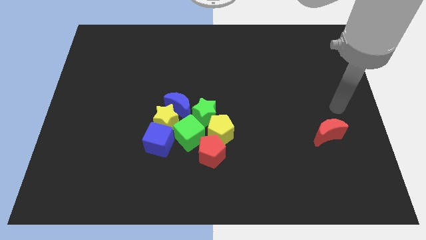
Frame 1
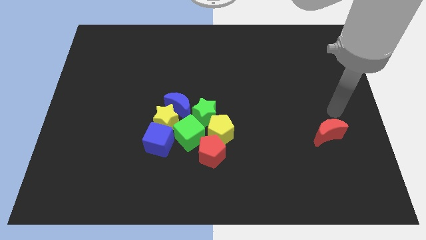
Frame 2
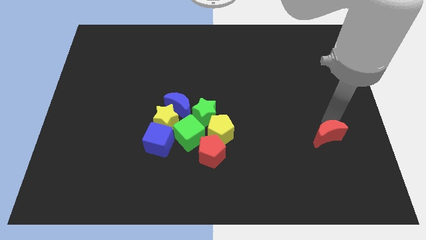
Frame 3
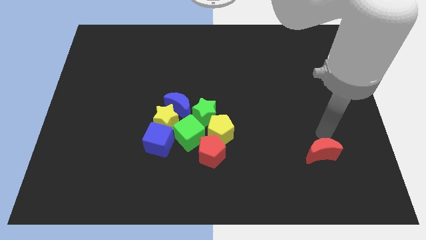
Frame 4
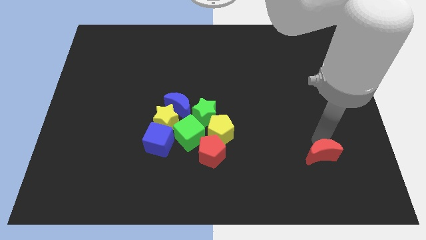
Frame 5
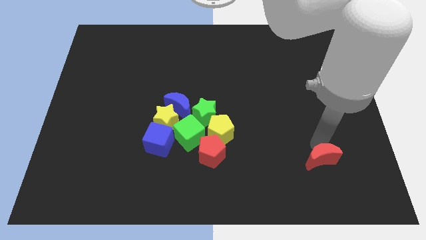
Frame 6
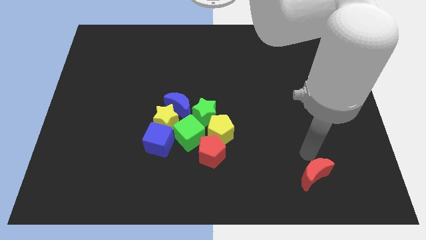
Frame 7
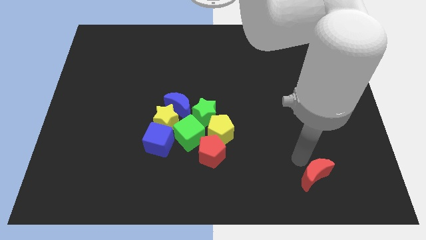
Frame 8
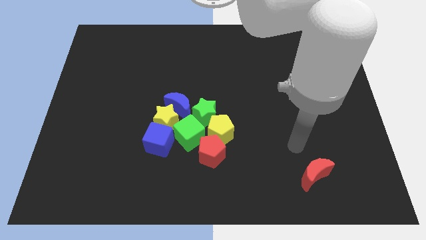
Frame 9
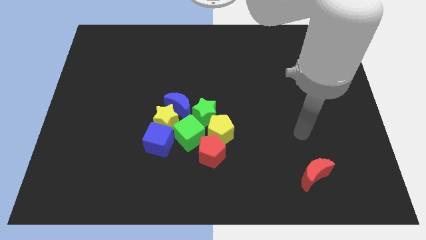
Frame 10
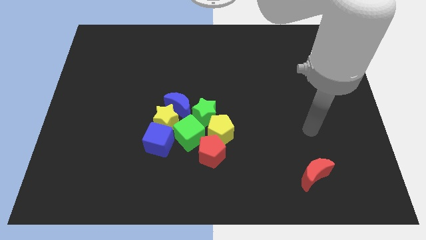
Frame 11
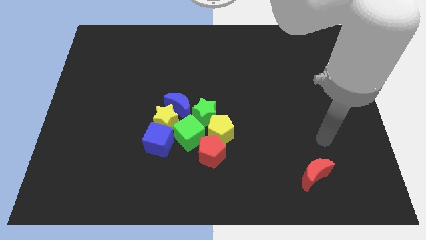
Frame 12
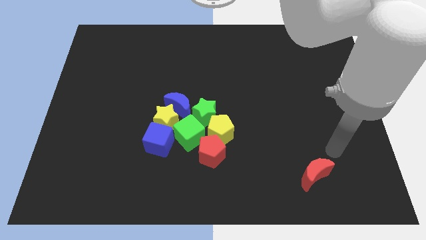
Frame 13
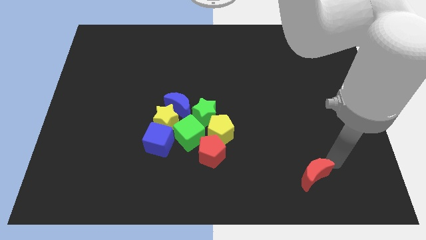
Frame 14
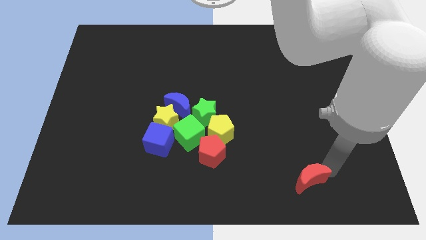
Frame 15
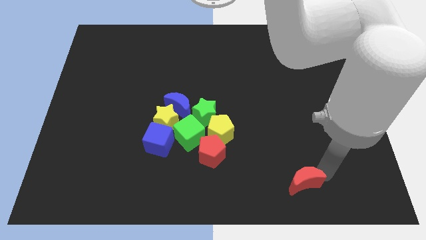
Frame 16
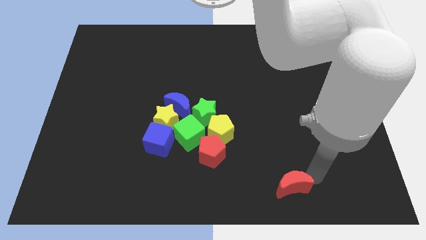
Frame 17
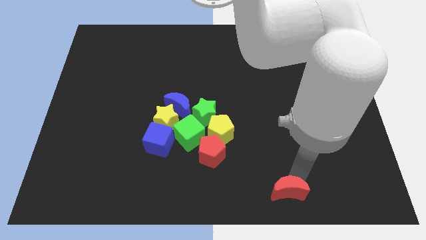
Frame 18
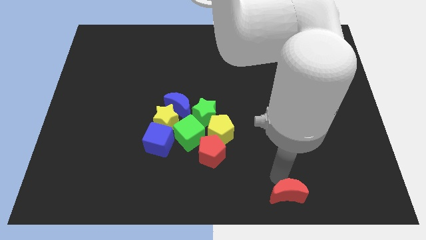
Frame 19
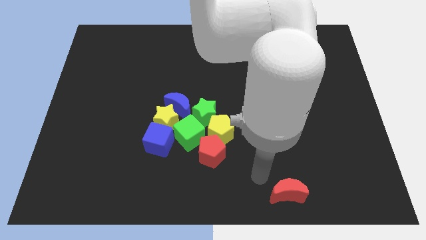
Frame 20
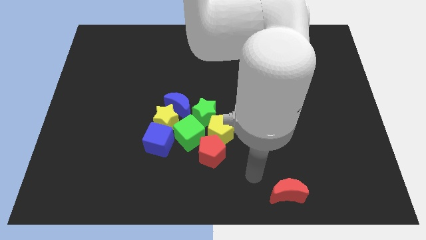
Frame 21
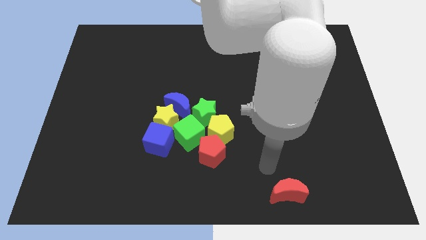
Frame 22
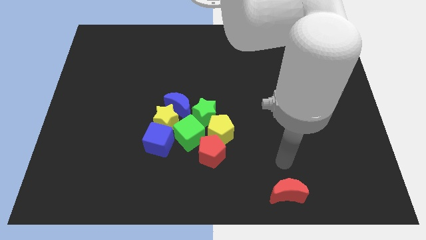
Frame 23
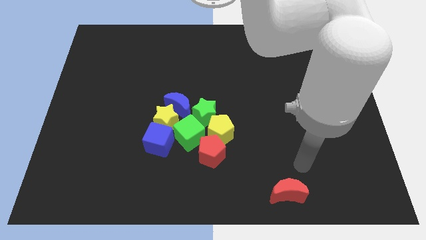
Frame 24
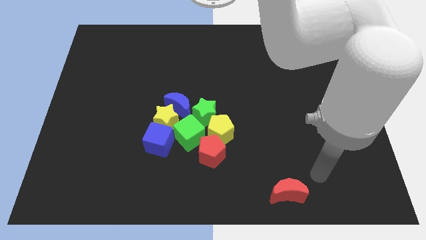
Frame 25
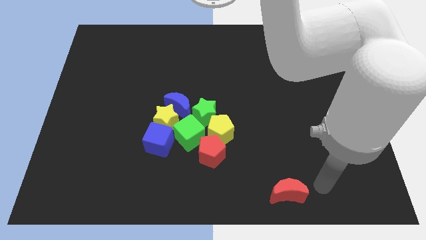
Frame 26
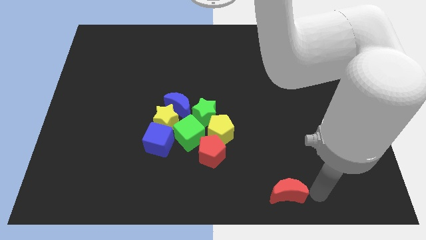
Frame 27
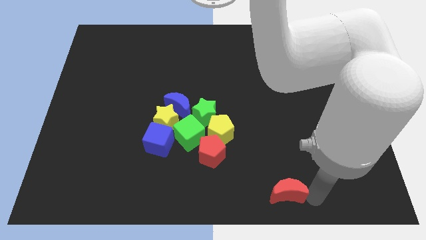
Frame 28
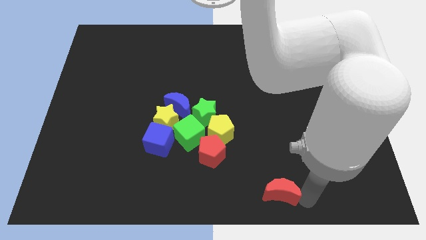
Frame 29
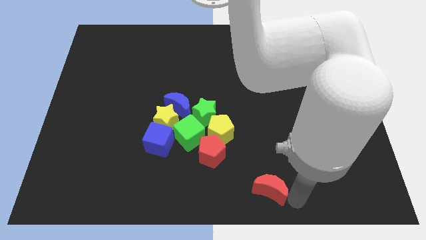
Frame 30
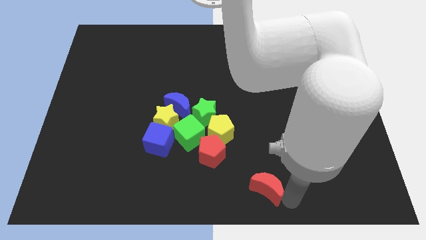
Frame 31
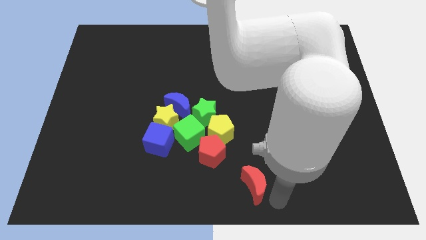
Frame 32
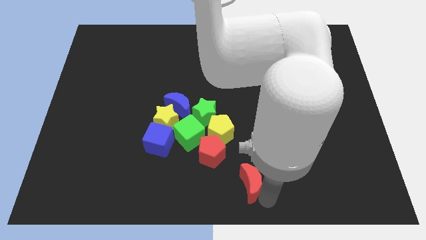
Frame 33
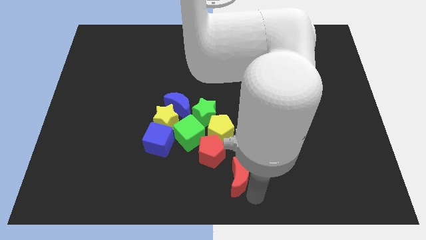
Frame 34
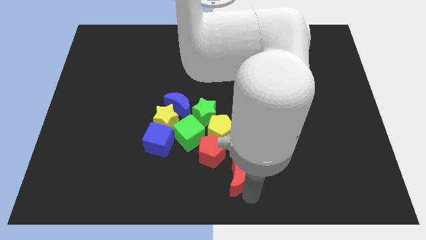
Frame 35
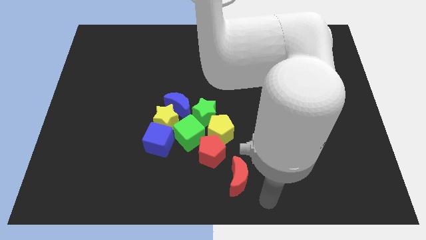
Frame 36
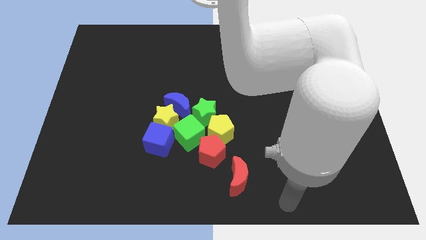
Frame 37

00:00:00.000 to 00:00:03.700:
move the red crescent at the bottom right of the red pentagon

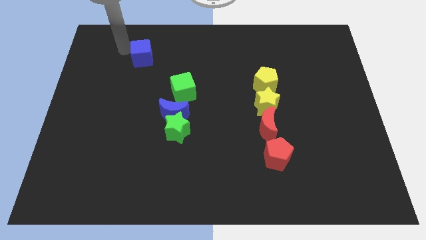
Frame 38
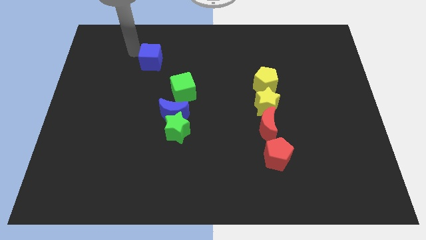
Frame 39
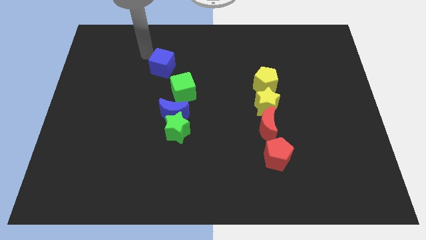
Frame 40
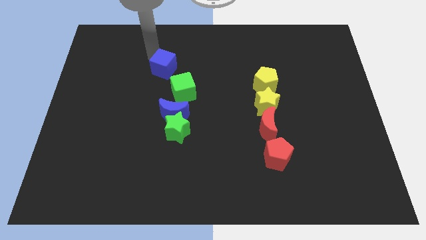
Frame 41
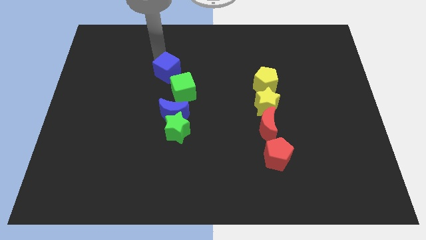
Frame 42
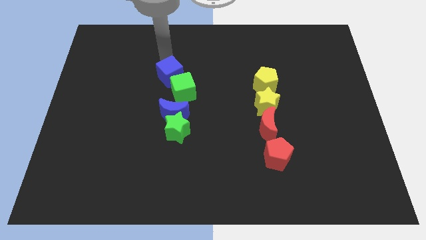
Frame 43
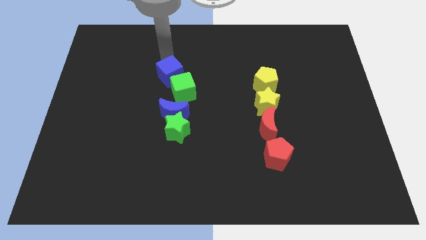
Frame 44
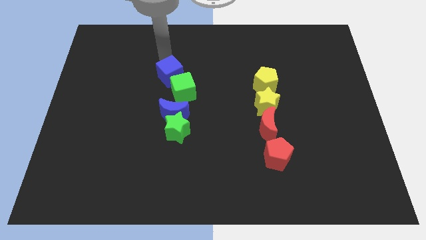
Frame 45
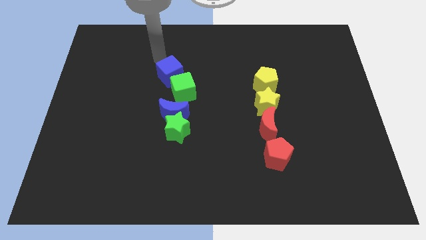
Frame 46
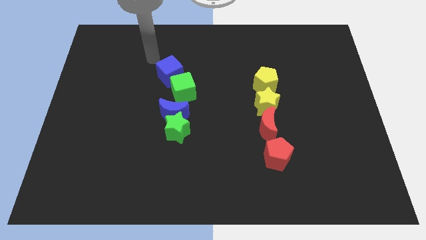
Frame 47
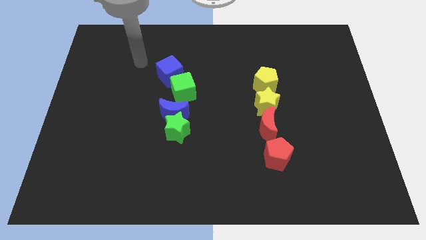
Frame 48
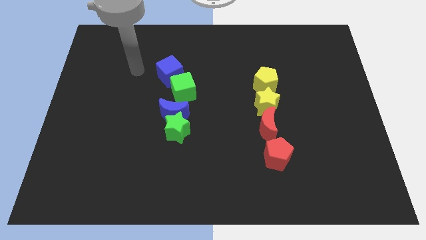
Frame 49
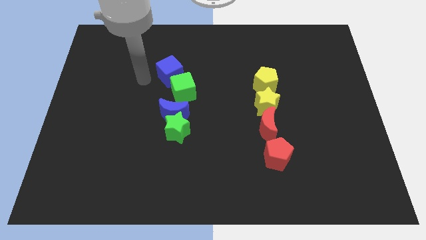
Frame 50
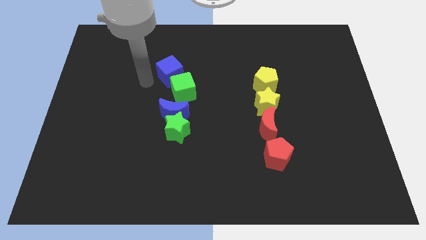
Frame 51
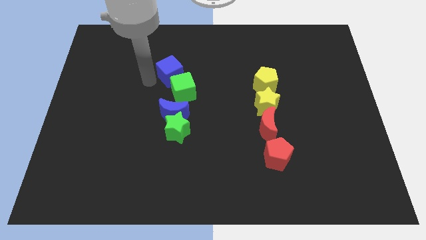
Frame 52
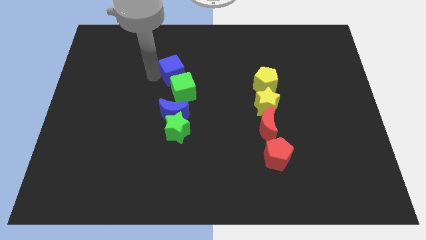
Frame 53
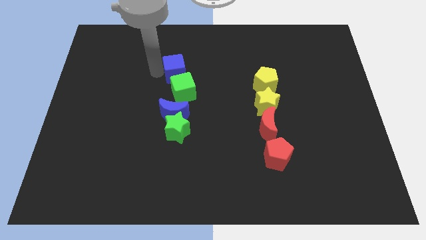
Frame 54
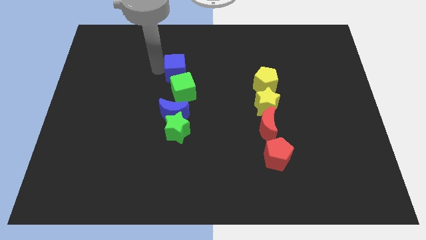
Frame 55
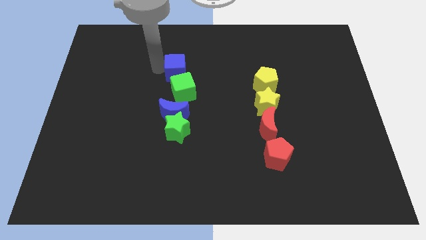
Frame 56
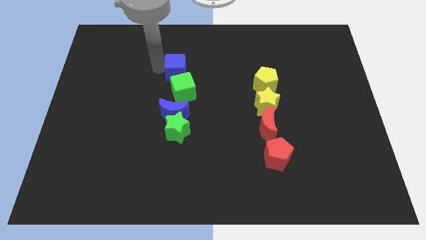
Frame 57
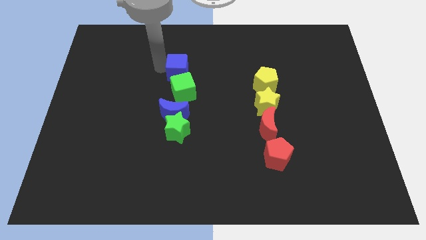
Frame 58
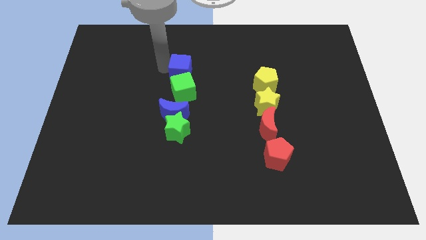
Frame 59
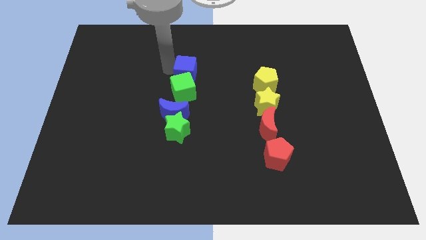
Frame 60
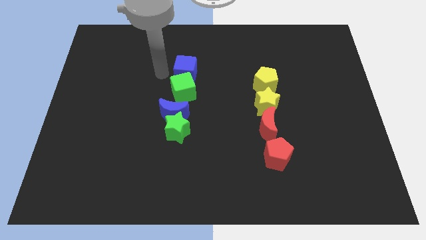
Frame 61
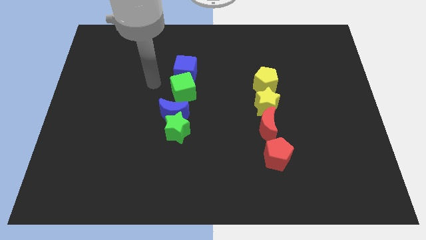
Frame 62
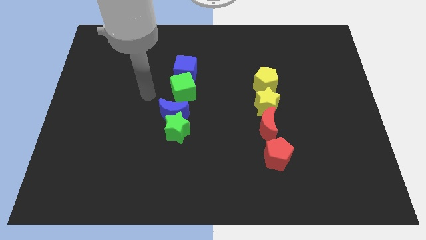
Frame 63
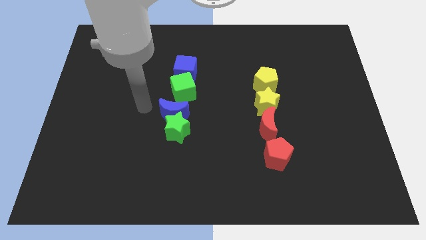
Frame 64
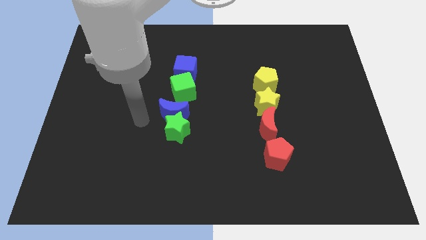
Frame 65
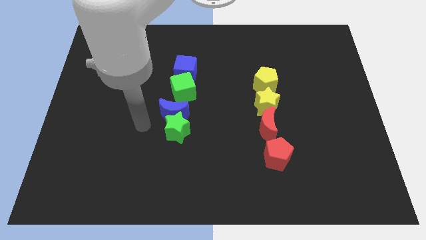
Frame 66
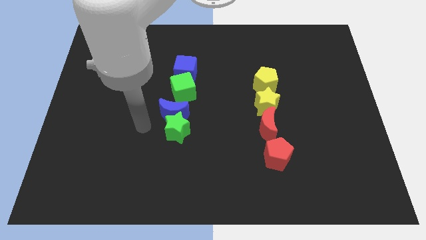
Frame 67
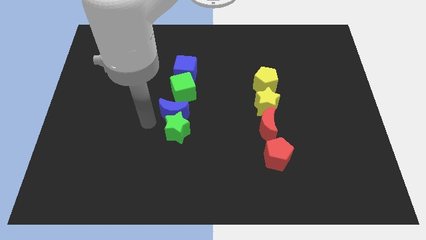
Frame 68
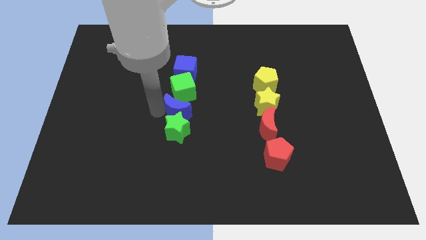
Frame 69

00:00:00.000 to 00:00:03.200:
place the blue cube vertically above the green cube

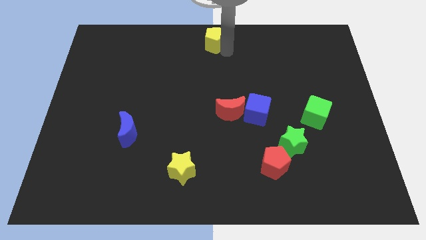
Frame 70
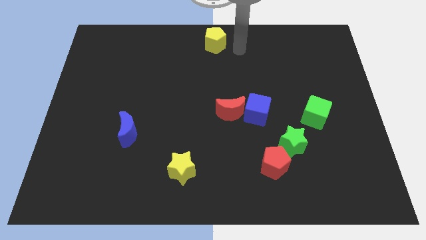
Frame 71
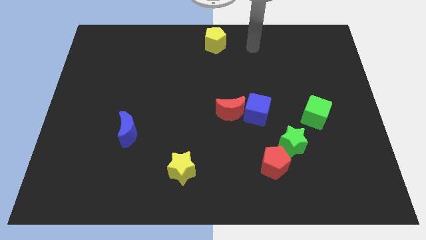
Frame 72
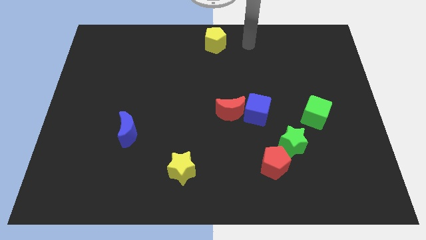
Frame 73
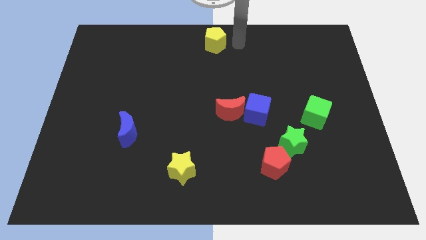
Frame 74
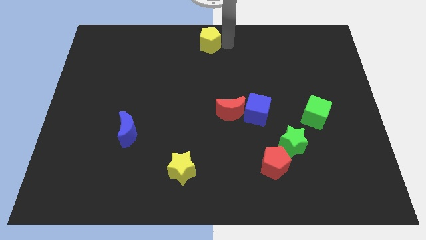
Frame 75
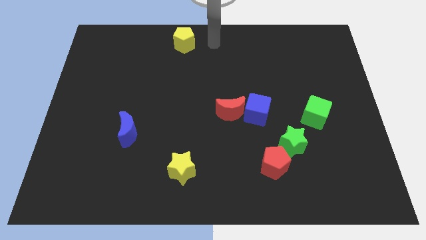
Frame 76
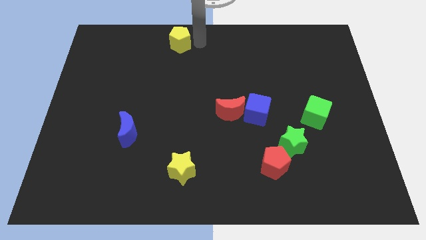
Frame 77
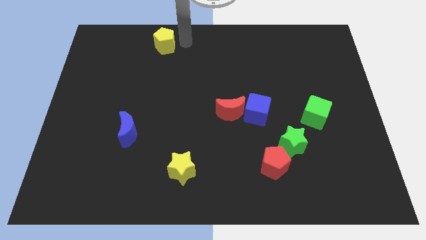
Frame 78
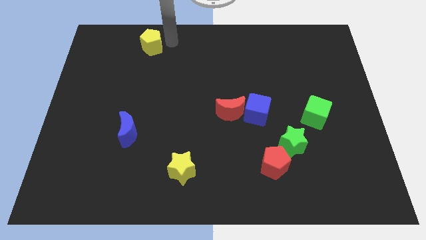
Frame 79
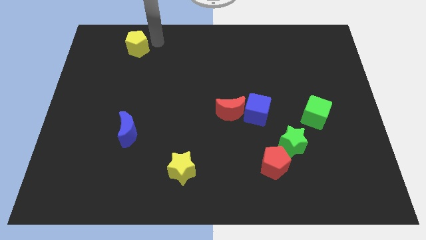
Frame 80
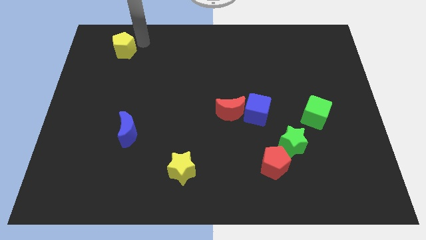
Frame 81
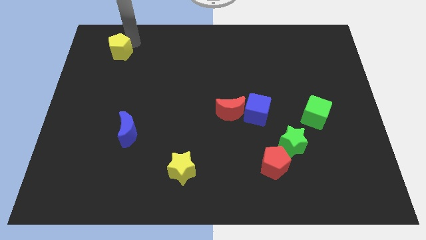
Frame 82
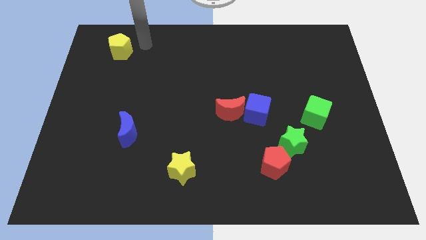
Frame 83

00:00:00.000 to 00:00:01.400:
move the yellow pentagon towards the left of the board

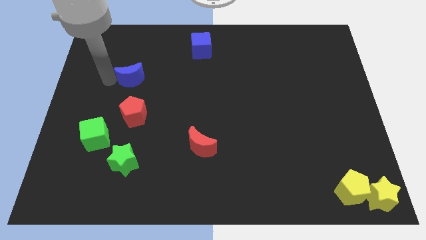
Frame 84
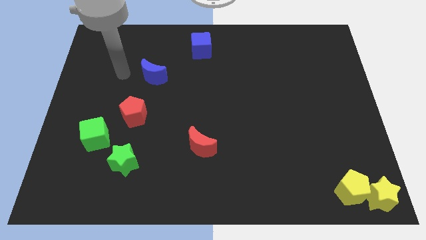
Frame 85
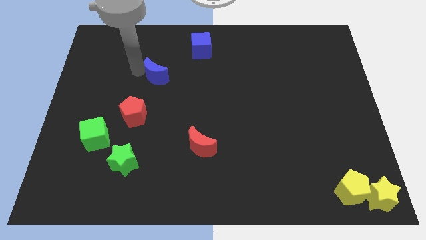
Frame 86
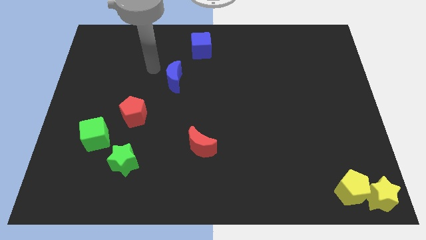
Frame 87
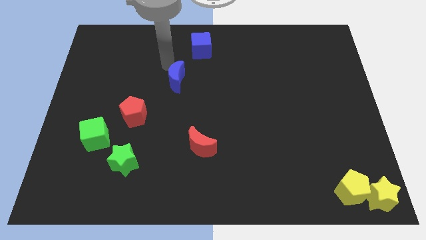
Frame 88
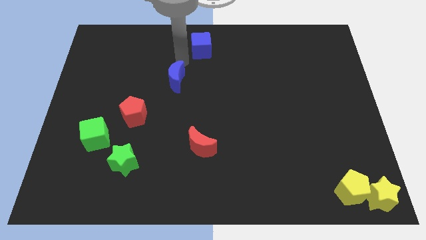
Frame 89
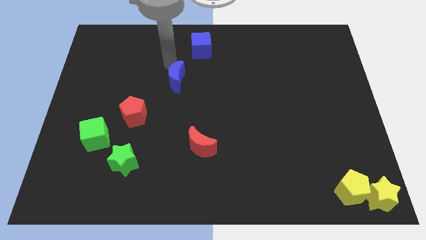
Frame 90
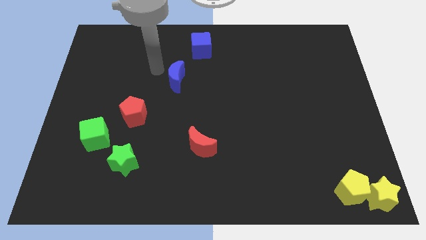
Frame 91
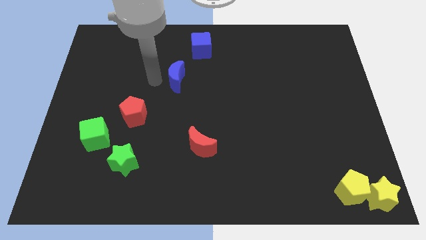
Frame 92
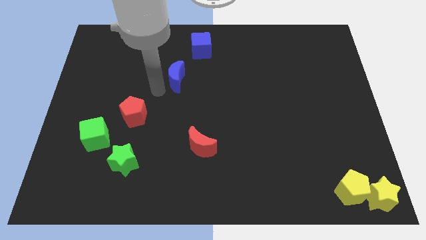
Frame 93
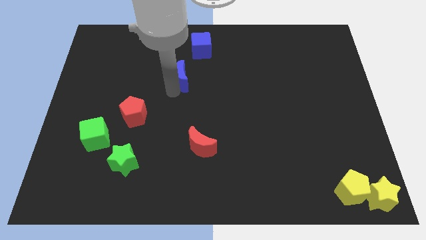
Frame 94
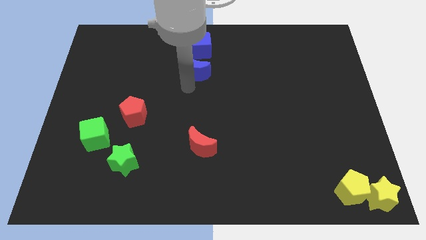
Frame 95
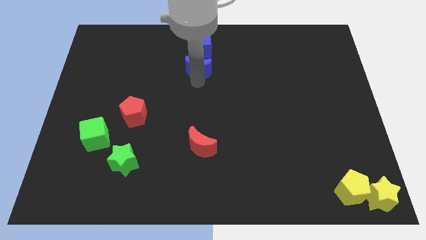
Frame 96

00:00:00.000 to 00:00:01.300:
drag the blue moon to the right
